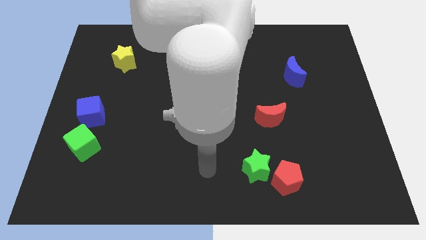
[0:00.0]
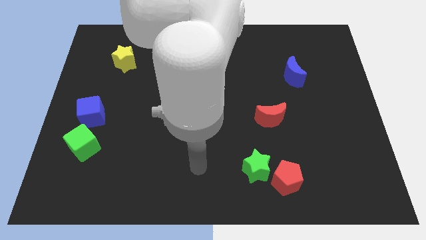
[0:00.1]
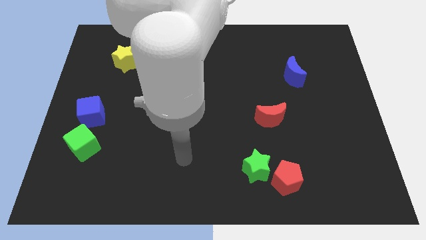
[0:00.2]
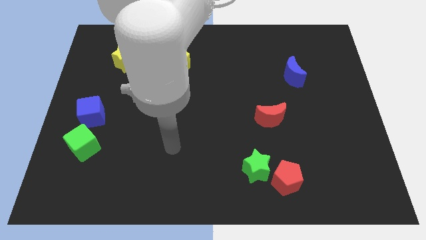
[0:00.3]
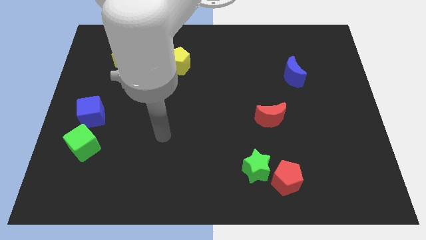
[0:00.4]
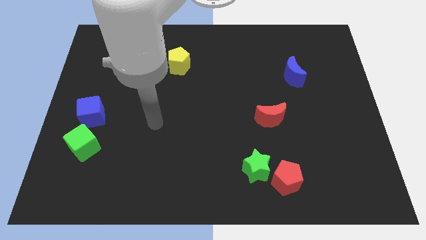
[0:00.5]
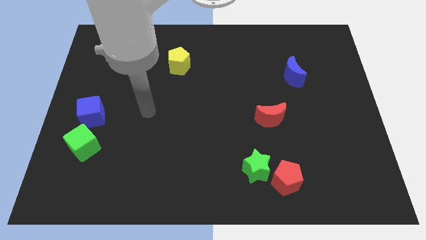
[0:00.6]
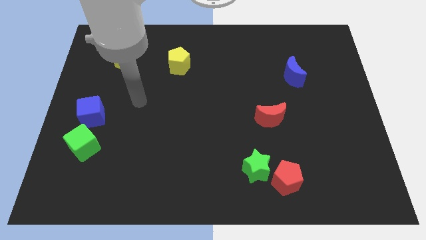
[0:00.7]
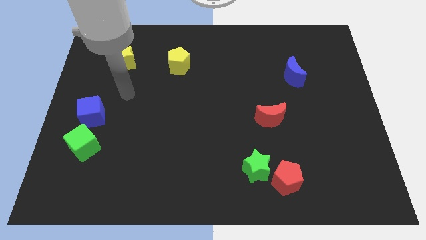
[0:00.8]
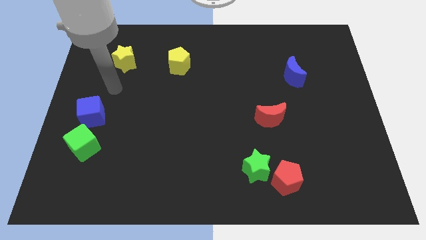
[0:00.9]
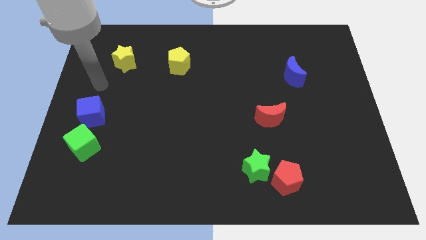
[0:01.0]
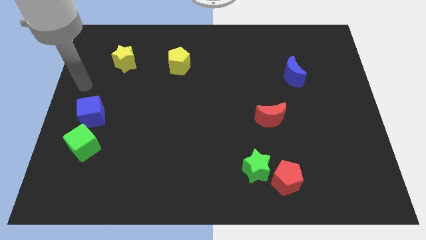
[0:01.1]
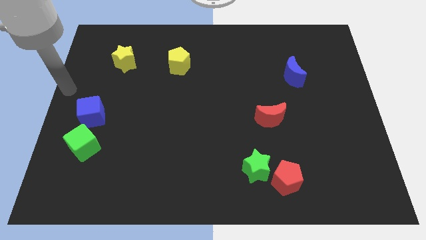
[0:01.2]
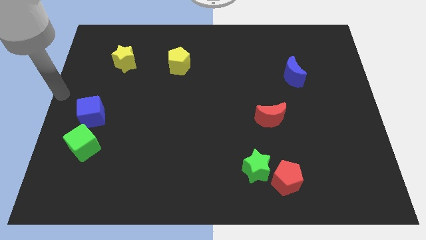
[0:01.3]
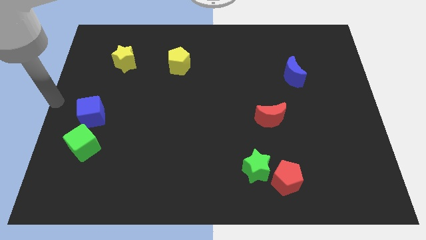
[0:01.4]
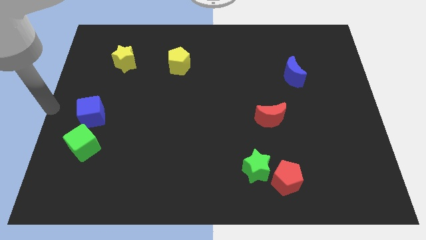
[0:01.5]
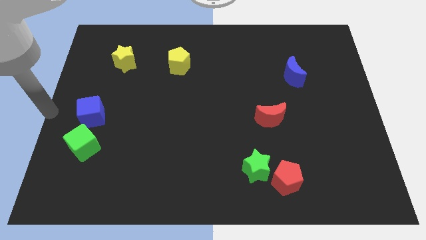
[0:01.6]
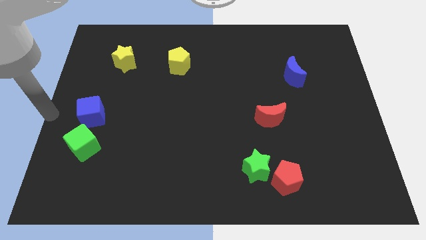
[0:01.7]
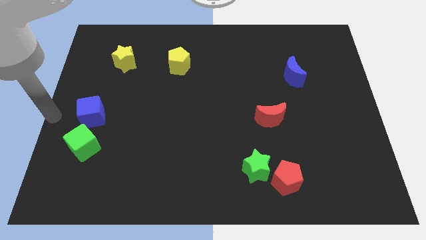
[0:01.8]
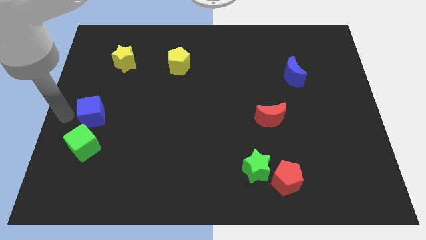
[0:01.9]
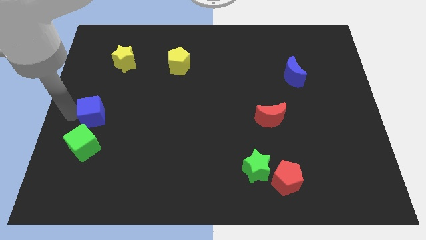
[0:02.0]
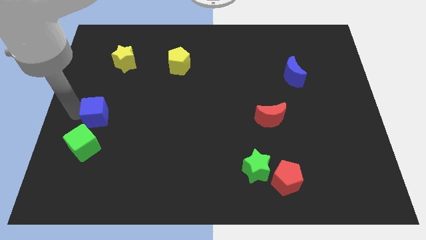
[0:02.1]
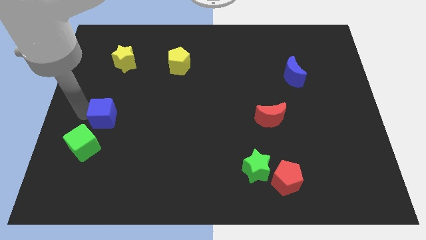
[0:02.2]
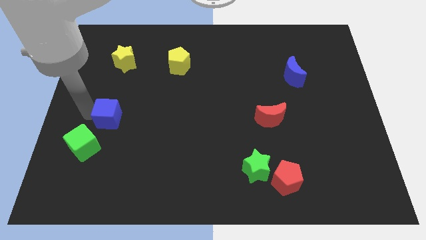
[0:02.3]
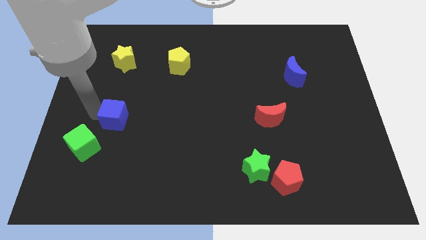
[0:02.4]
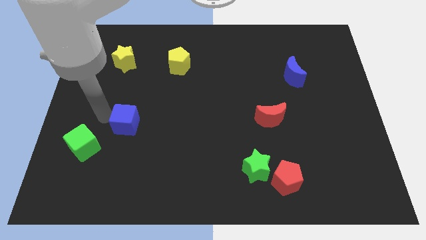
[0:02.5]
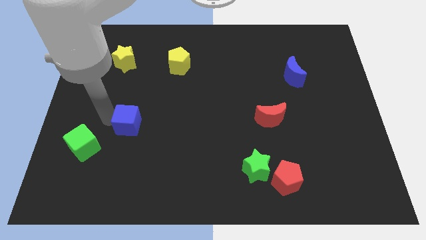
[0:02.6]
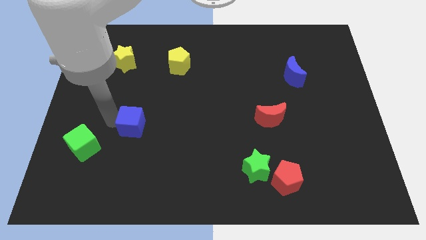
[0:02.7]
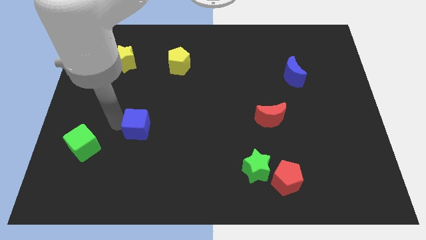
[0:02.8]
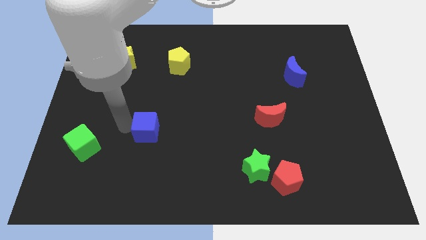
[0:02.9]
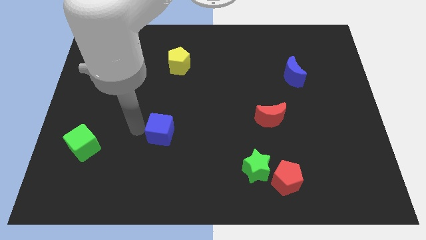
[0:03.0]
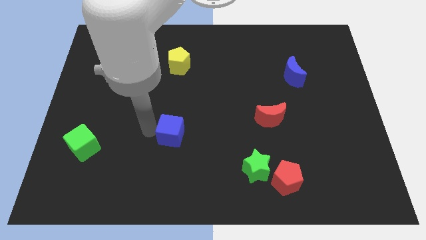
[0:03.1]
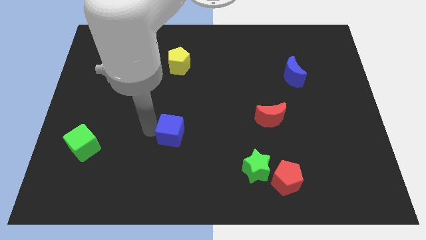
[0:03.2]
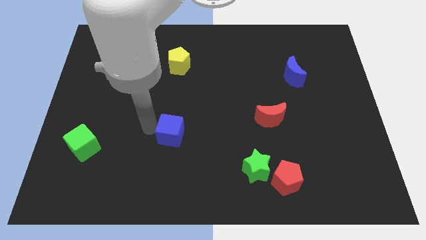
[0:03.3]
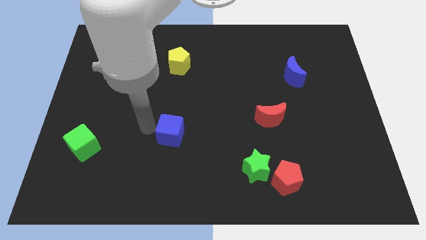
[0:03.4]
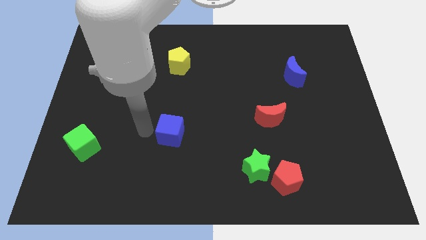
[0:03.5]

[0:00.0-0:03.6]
move the blue cube towards the center of the board

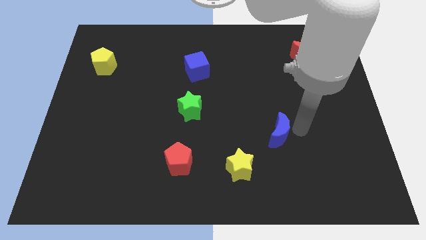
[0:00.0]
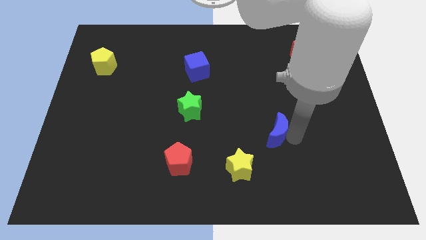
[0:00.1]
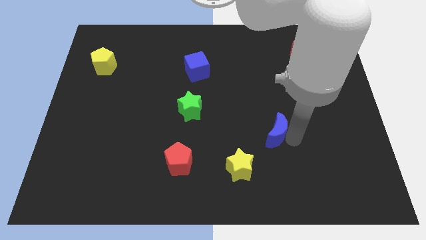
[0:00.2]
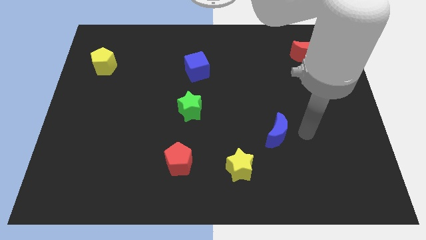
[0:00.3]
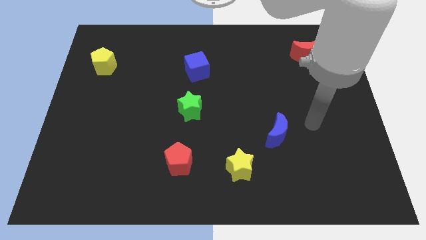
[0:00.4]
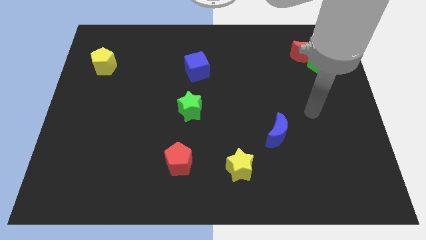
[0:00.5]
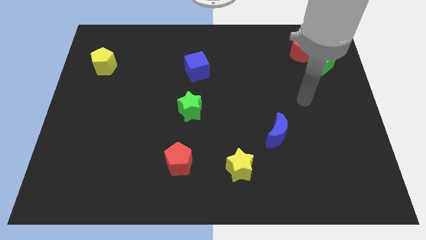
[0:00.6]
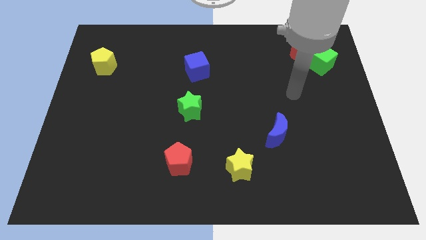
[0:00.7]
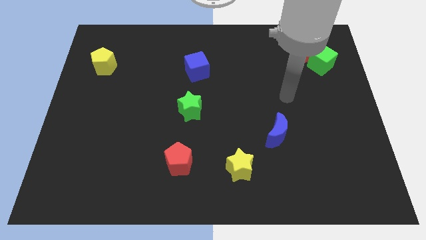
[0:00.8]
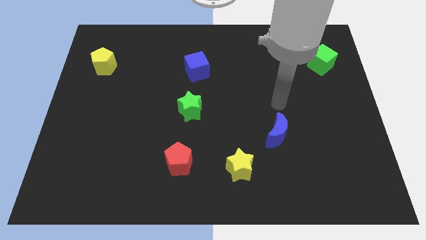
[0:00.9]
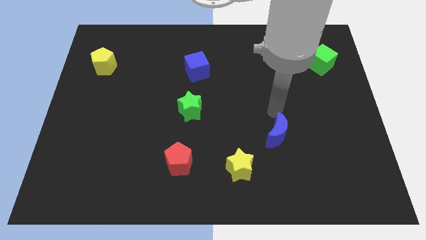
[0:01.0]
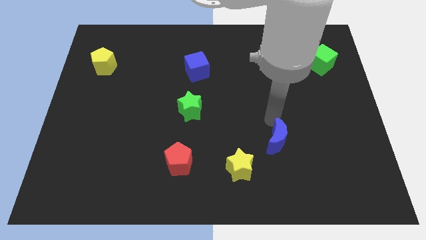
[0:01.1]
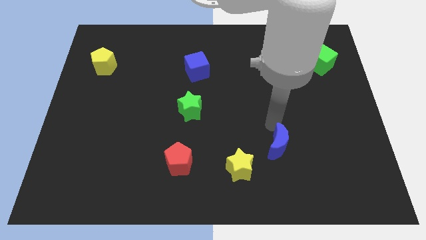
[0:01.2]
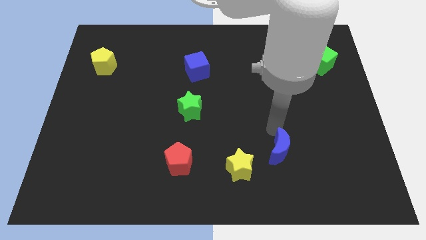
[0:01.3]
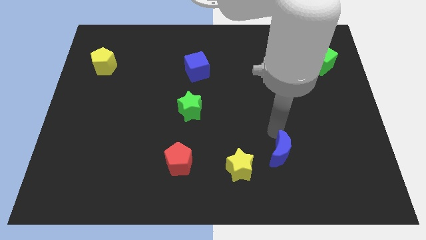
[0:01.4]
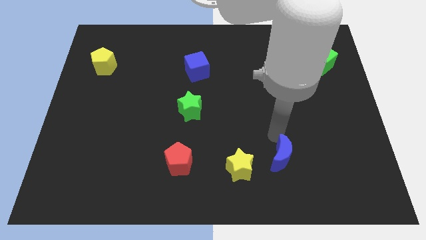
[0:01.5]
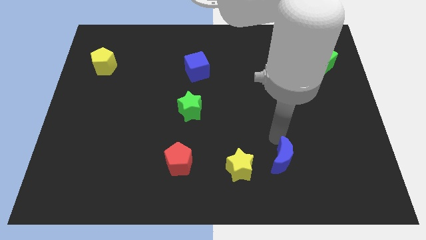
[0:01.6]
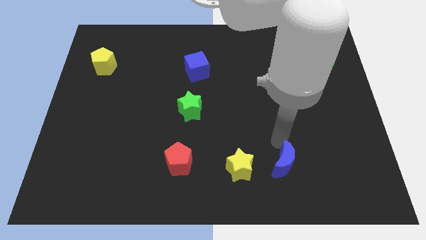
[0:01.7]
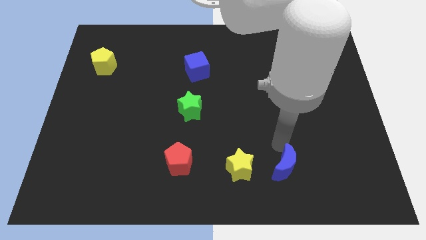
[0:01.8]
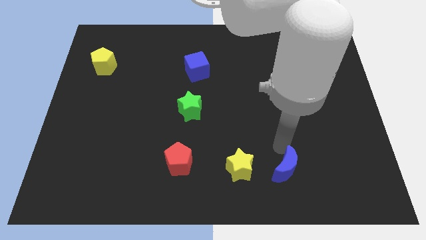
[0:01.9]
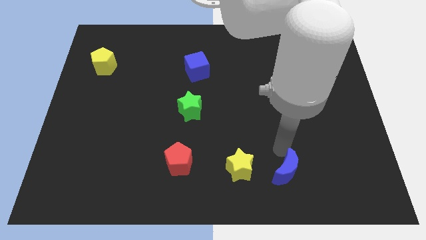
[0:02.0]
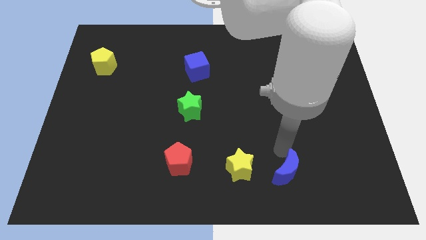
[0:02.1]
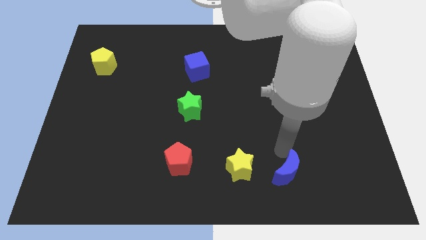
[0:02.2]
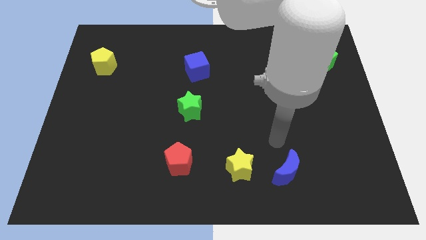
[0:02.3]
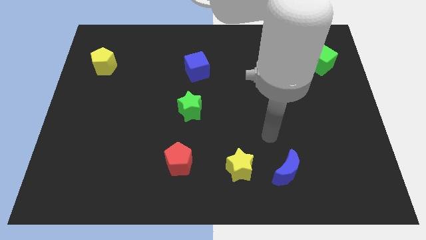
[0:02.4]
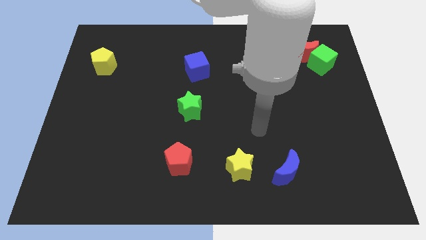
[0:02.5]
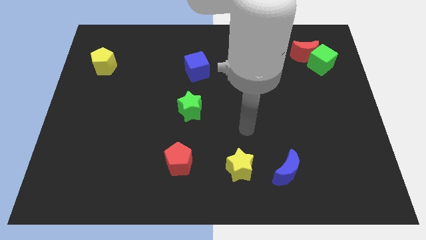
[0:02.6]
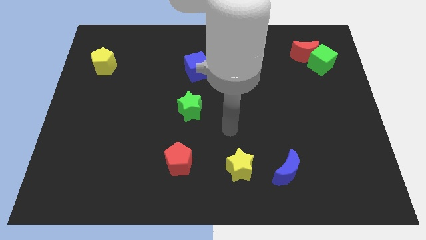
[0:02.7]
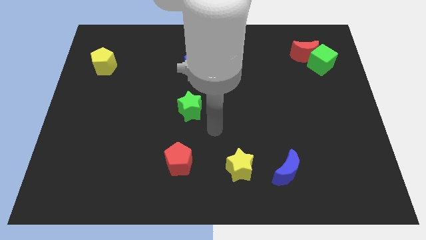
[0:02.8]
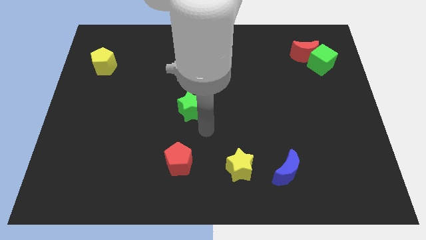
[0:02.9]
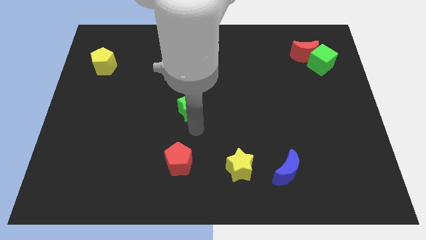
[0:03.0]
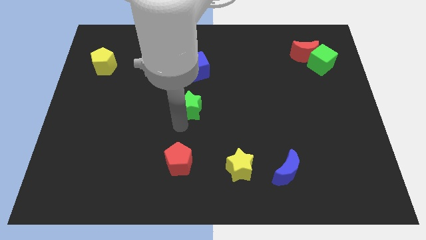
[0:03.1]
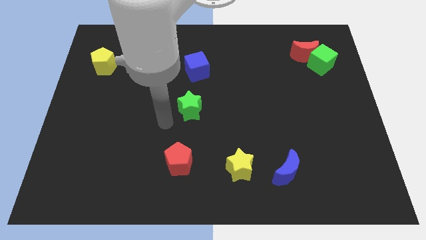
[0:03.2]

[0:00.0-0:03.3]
place the blue moon to the right of the yellow star

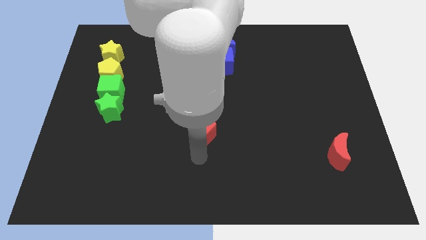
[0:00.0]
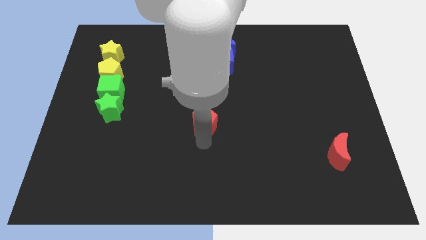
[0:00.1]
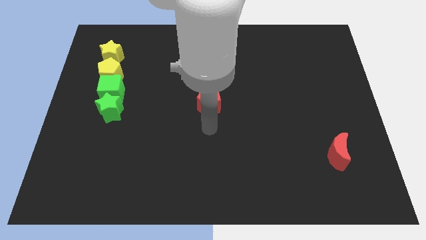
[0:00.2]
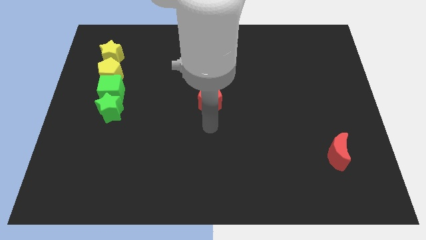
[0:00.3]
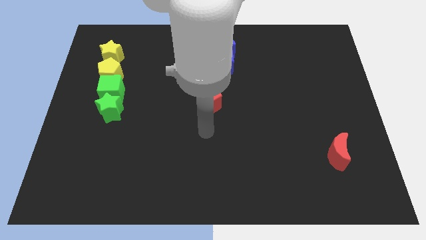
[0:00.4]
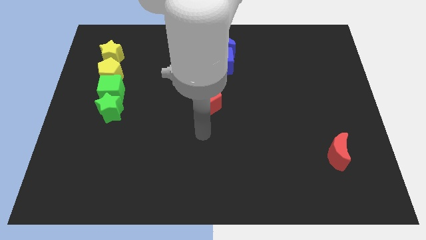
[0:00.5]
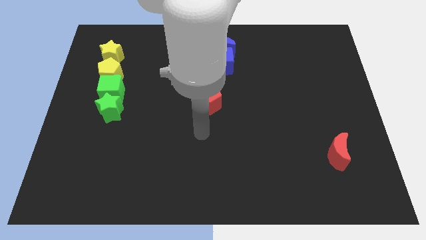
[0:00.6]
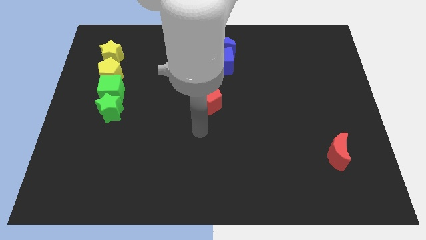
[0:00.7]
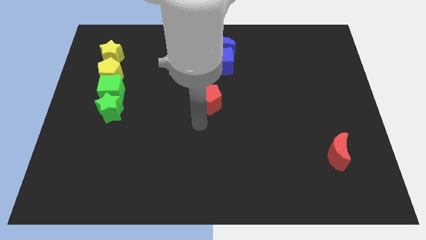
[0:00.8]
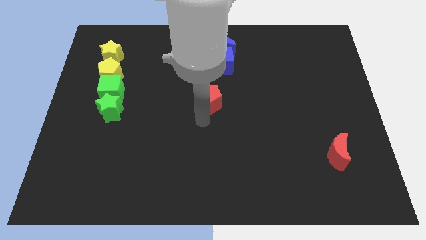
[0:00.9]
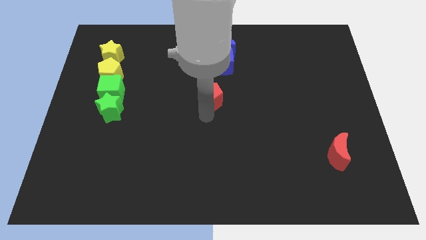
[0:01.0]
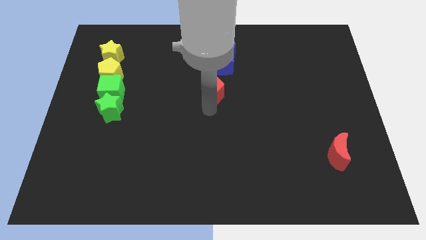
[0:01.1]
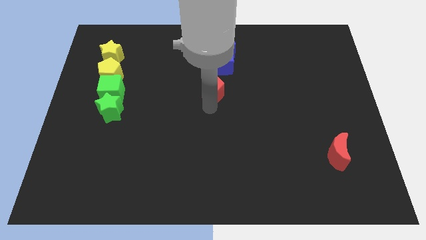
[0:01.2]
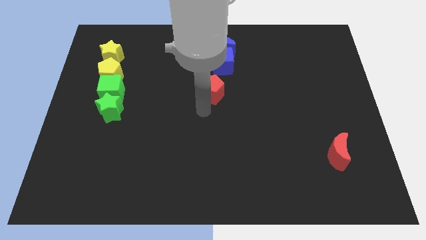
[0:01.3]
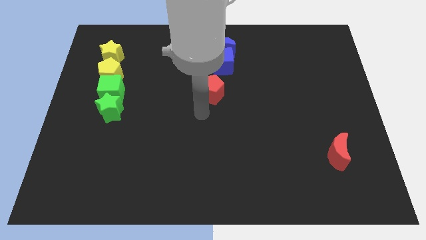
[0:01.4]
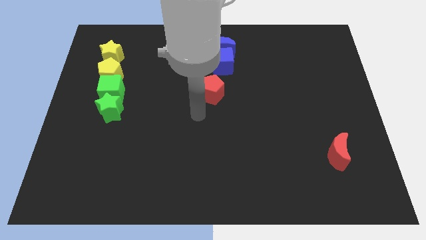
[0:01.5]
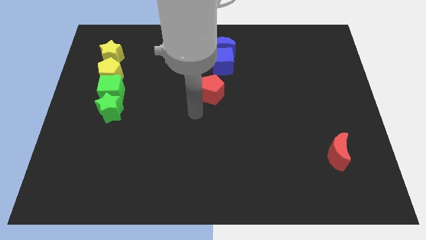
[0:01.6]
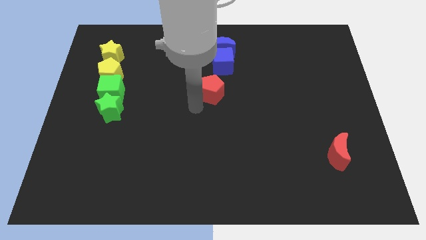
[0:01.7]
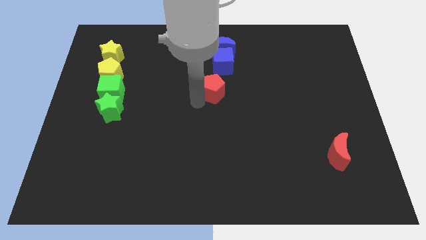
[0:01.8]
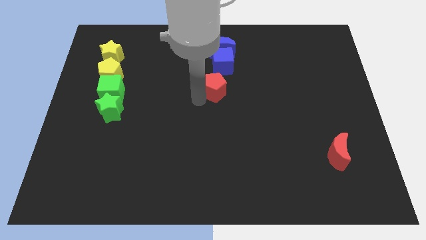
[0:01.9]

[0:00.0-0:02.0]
push the red pentagon below the blue cube
